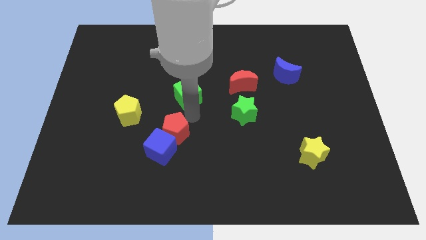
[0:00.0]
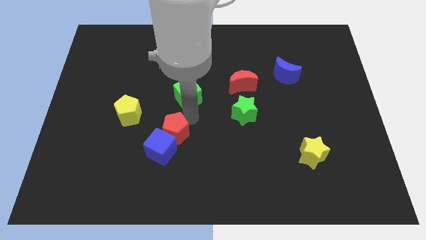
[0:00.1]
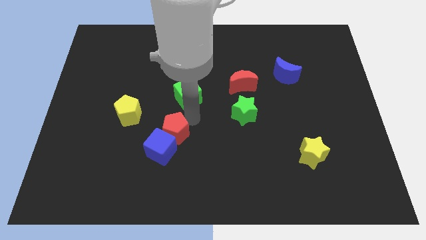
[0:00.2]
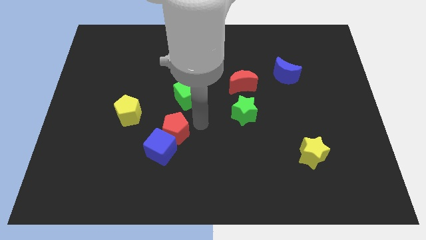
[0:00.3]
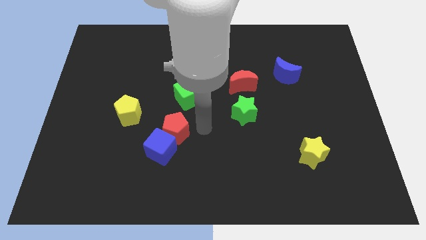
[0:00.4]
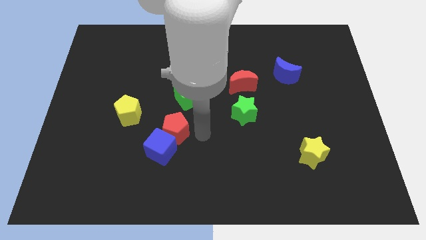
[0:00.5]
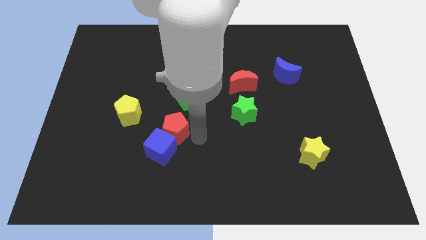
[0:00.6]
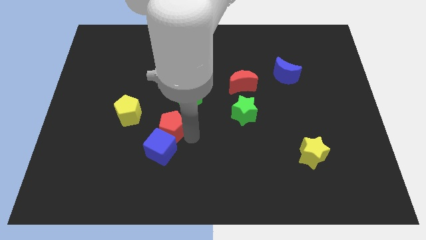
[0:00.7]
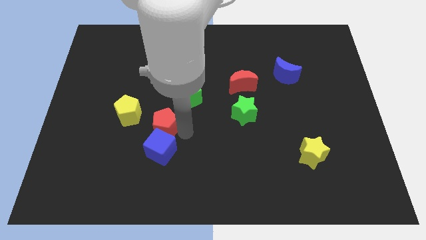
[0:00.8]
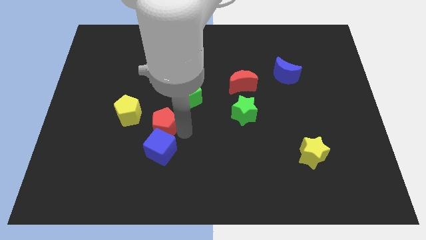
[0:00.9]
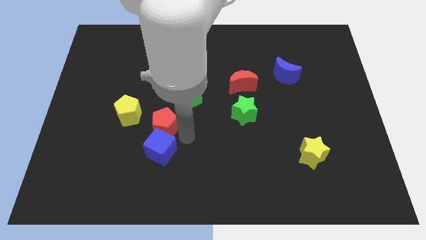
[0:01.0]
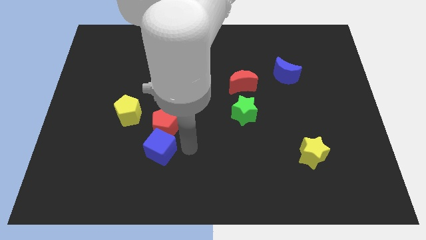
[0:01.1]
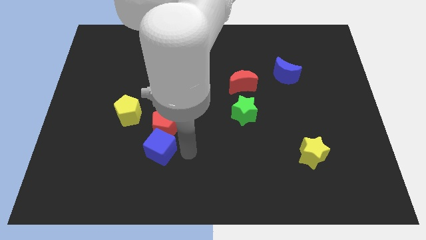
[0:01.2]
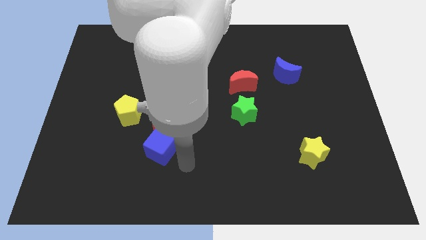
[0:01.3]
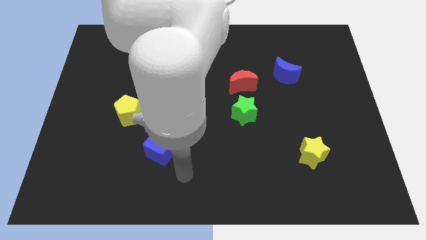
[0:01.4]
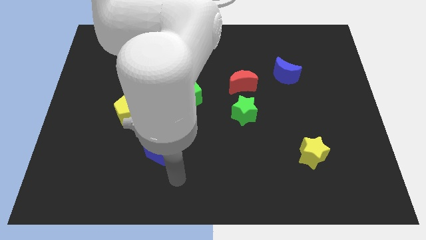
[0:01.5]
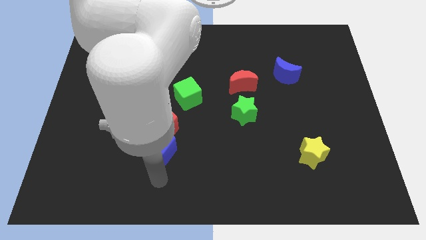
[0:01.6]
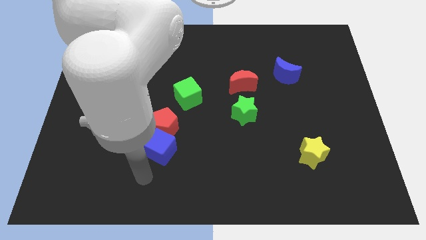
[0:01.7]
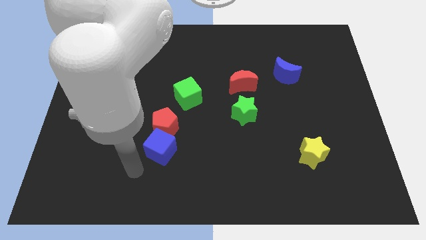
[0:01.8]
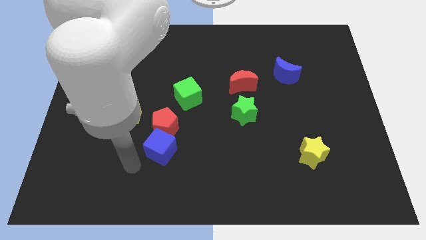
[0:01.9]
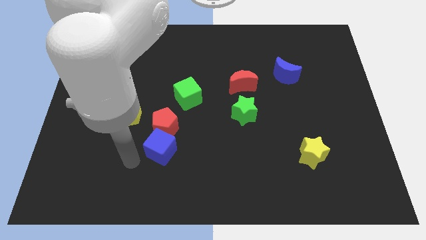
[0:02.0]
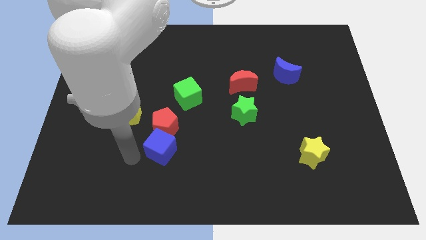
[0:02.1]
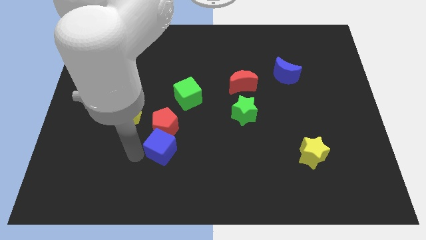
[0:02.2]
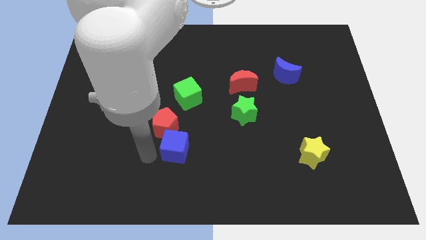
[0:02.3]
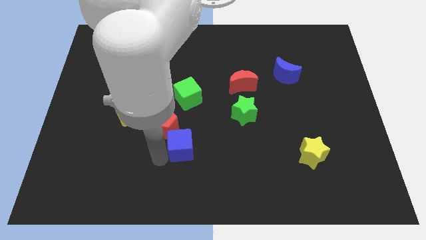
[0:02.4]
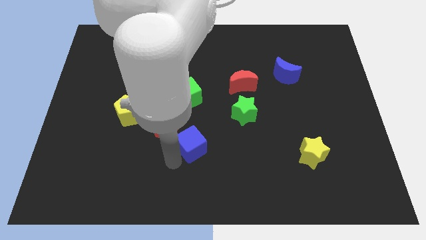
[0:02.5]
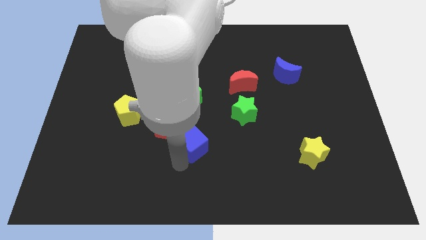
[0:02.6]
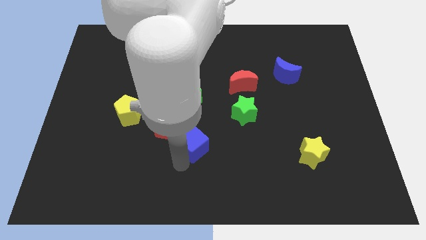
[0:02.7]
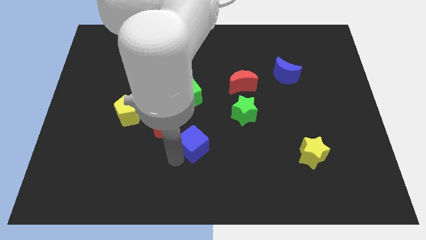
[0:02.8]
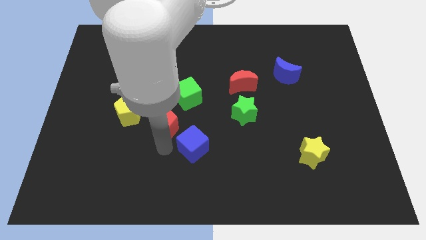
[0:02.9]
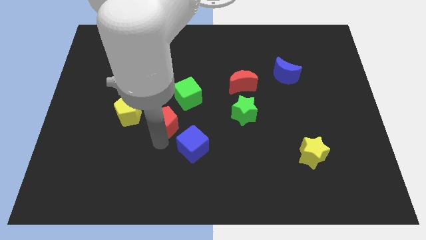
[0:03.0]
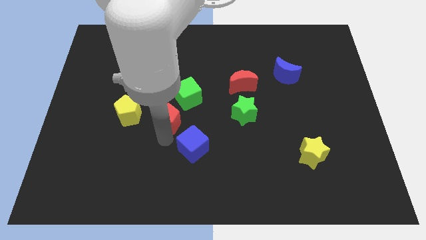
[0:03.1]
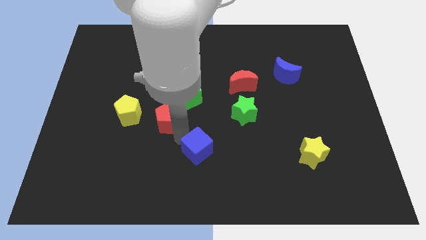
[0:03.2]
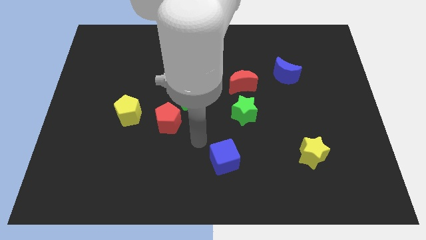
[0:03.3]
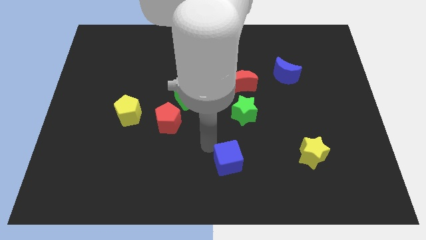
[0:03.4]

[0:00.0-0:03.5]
place the blue cube diagonally bottom right to the red pentagon

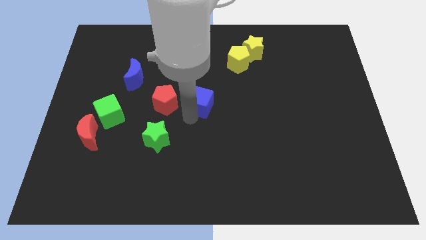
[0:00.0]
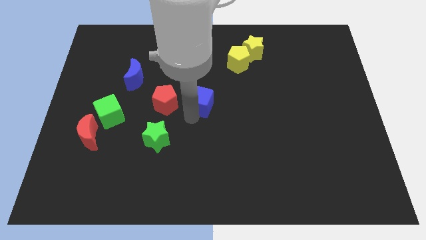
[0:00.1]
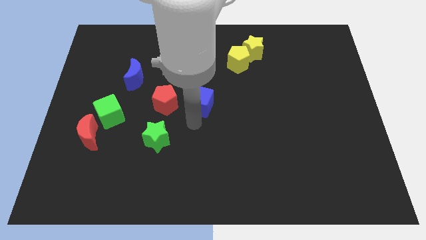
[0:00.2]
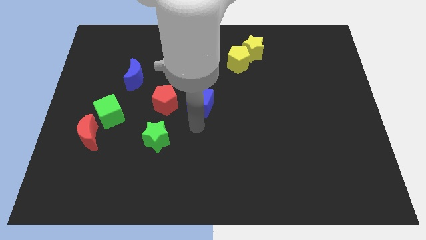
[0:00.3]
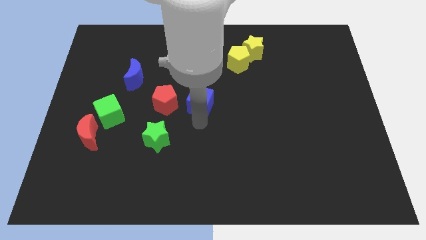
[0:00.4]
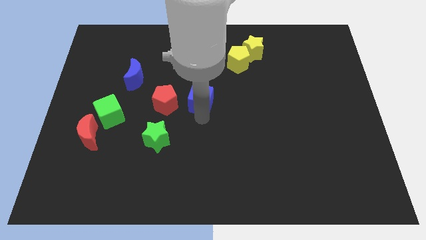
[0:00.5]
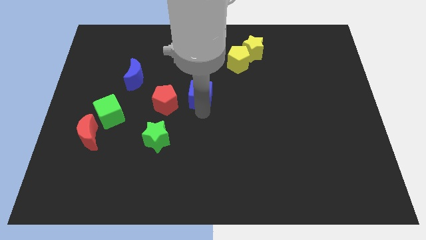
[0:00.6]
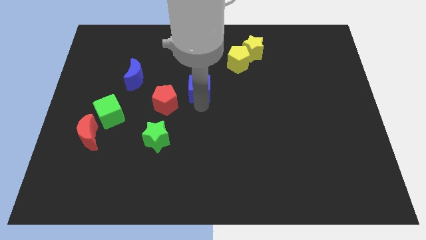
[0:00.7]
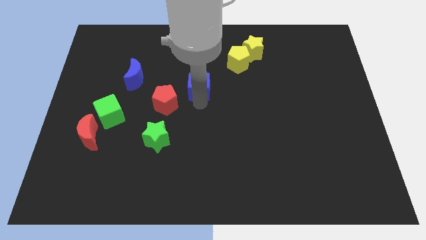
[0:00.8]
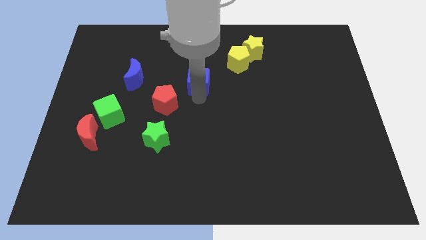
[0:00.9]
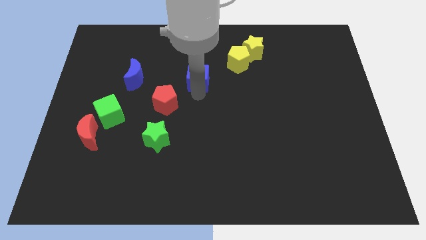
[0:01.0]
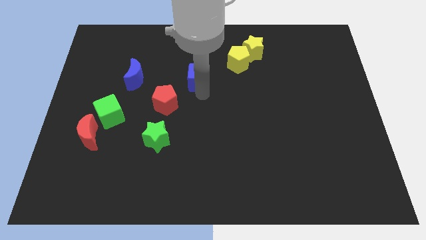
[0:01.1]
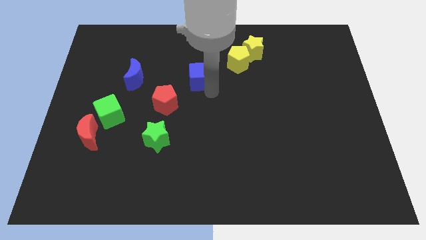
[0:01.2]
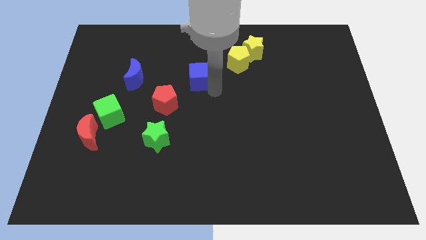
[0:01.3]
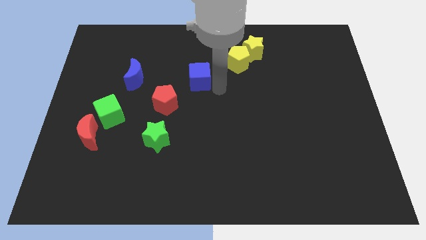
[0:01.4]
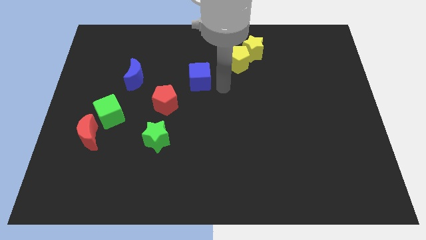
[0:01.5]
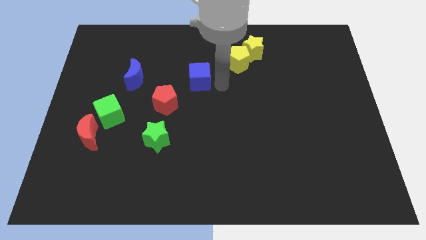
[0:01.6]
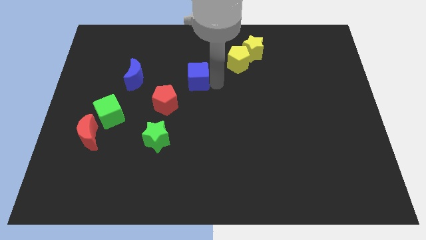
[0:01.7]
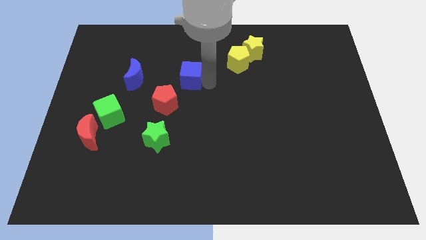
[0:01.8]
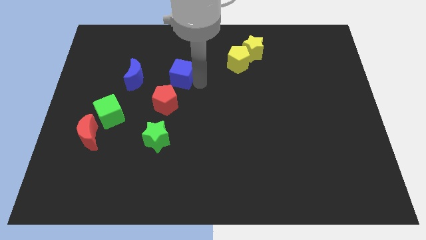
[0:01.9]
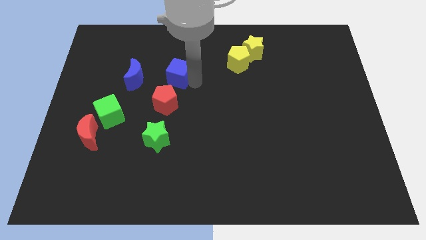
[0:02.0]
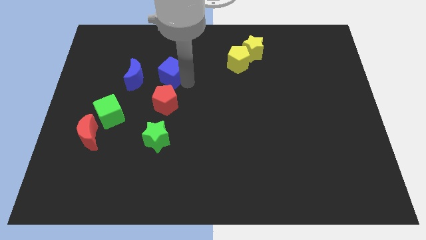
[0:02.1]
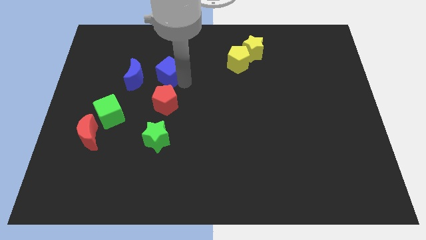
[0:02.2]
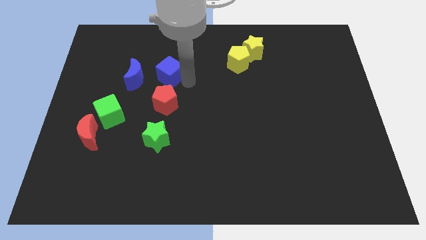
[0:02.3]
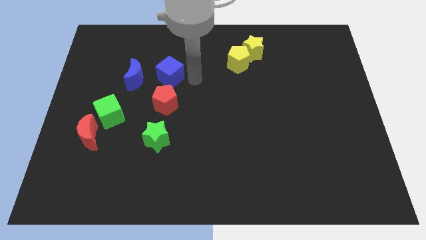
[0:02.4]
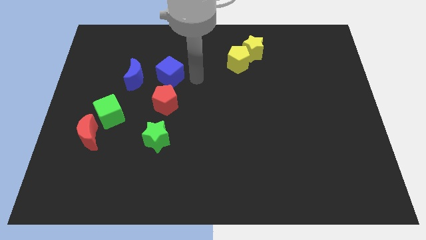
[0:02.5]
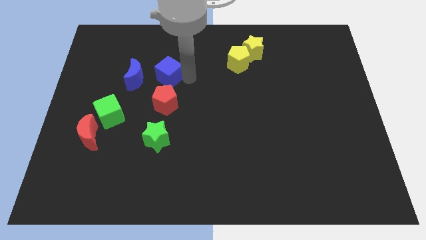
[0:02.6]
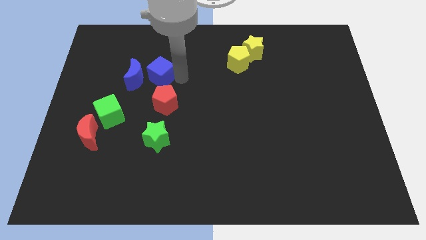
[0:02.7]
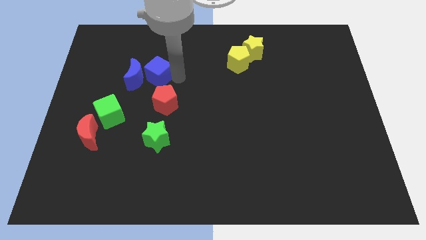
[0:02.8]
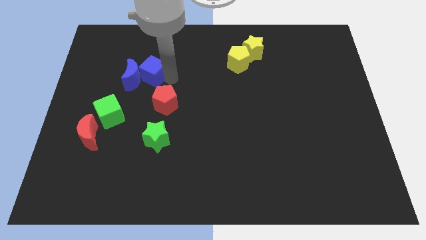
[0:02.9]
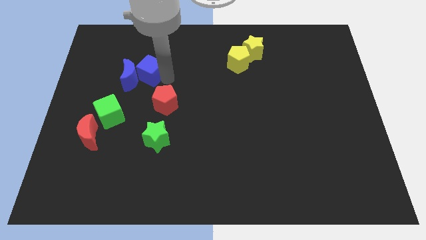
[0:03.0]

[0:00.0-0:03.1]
push the blue cube into the right side of the blue crescent

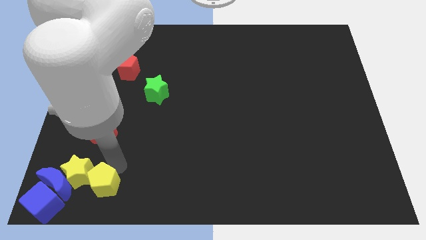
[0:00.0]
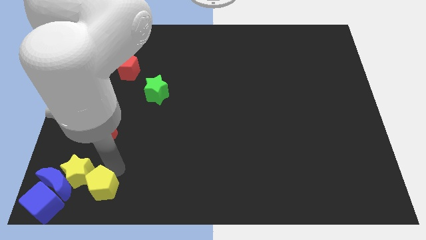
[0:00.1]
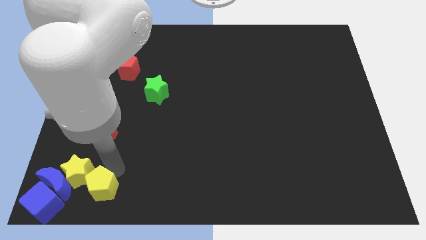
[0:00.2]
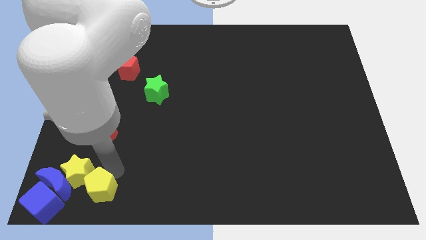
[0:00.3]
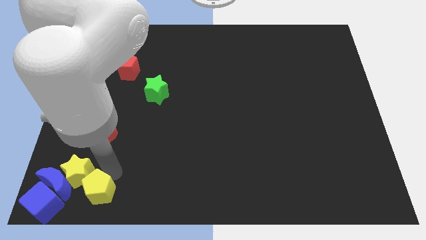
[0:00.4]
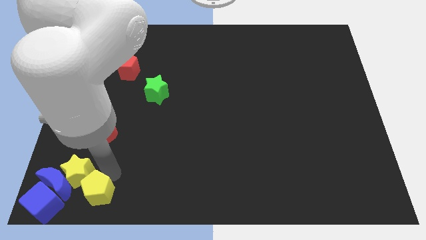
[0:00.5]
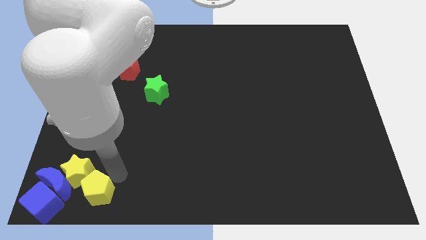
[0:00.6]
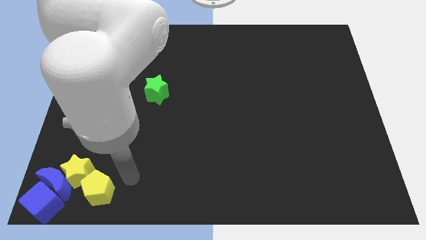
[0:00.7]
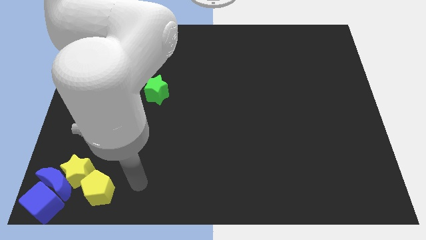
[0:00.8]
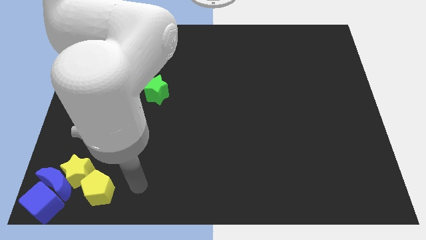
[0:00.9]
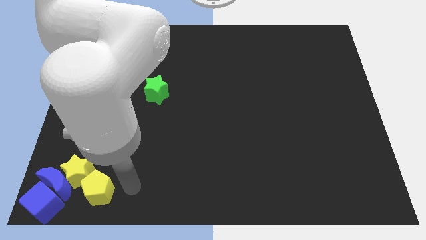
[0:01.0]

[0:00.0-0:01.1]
place the yellow pentagon towards the bottom right side of the yellow star

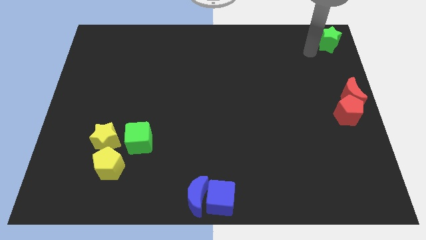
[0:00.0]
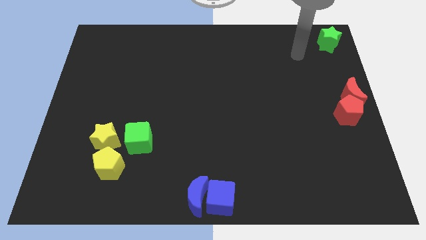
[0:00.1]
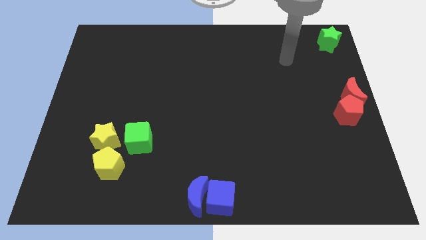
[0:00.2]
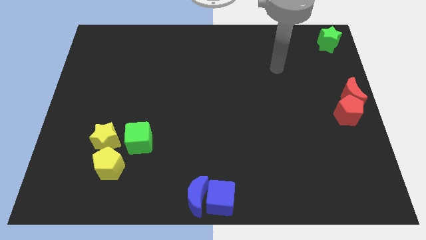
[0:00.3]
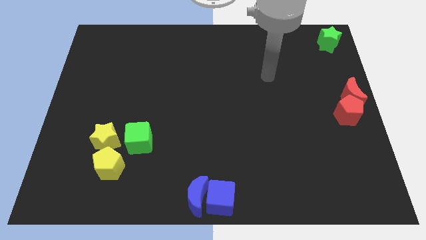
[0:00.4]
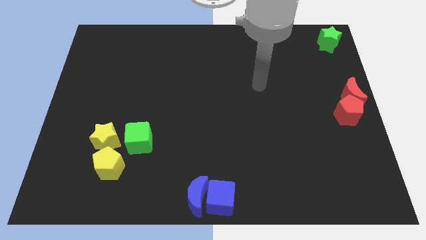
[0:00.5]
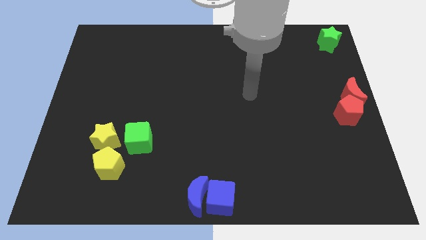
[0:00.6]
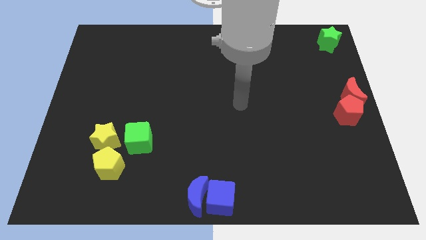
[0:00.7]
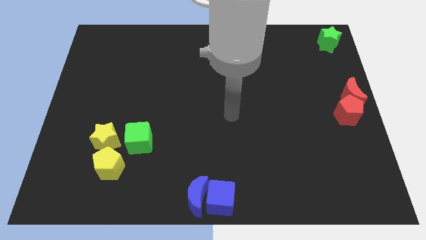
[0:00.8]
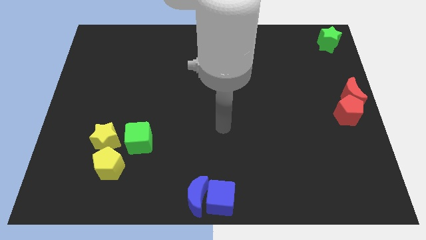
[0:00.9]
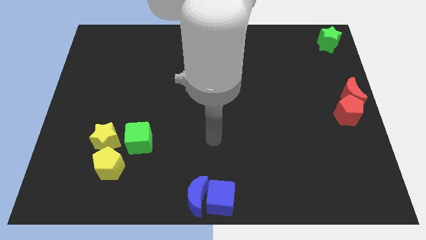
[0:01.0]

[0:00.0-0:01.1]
move the arm away from the green star
